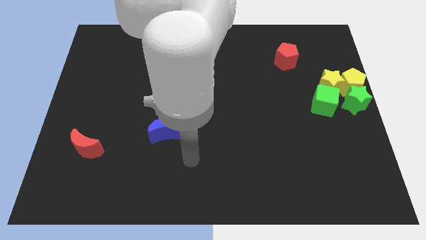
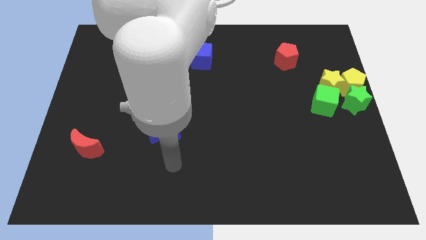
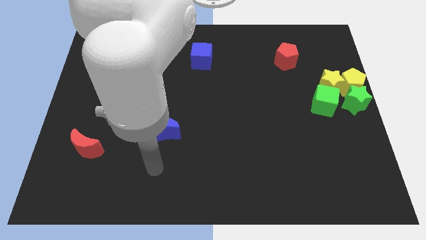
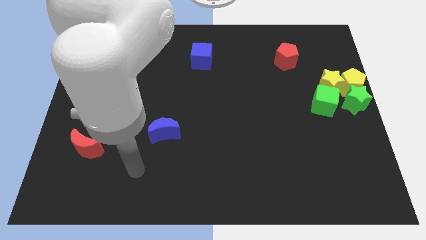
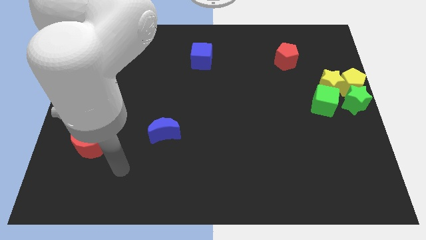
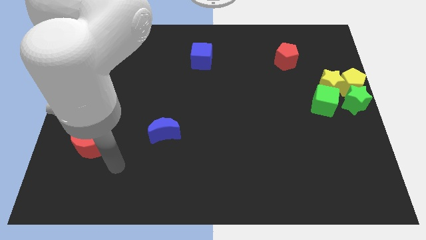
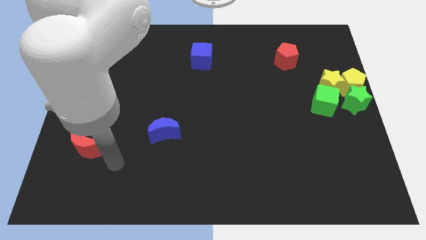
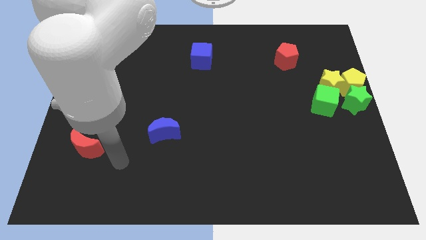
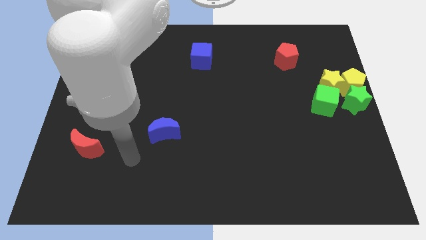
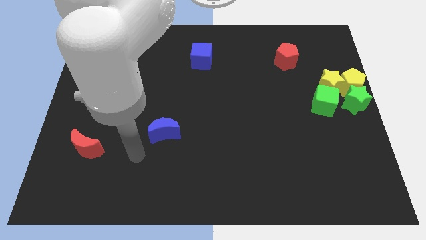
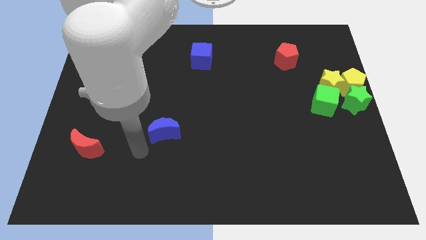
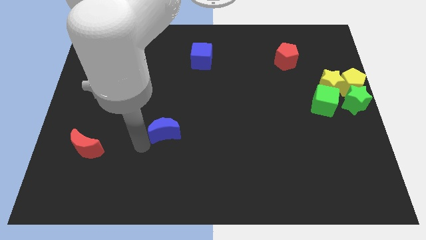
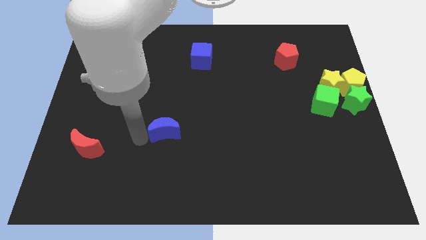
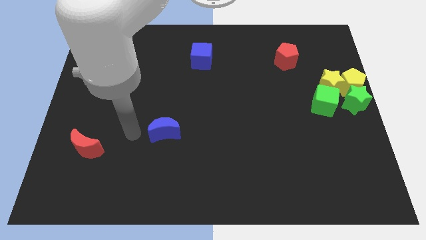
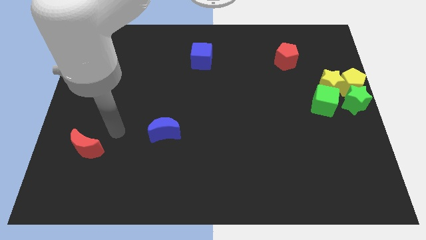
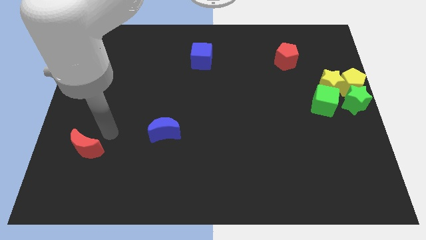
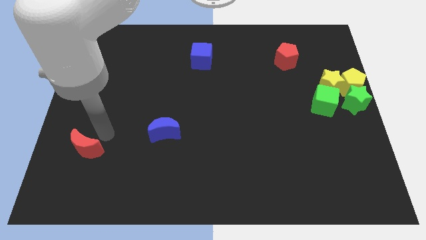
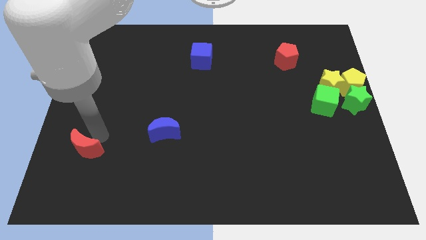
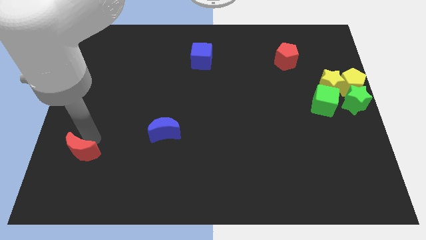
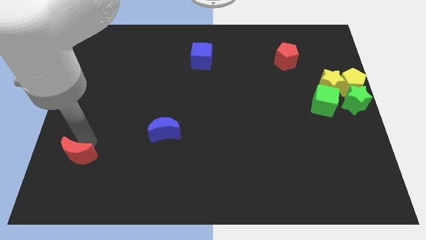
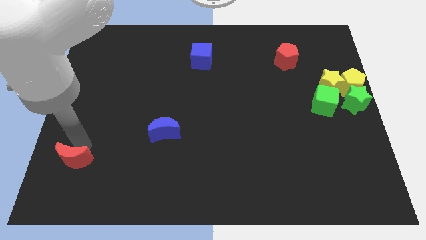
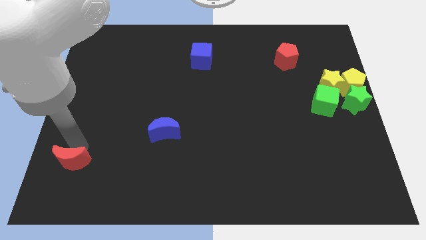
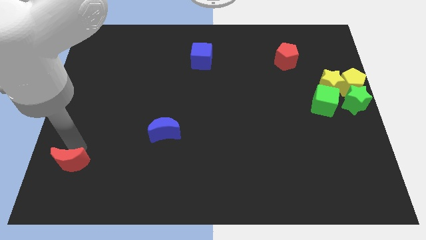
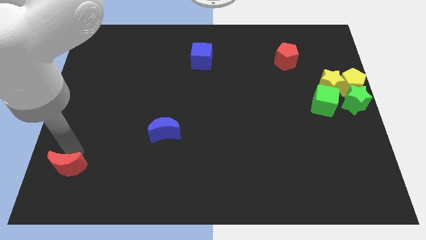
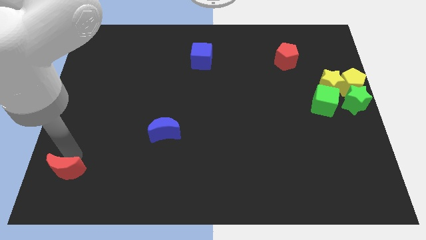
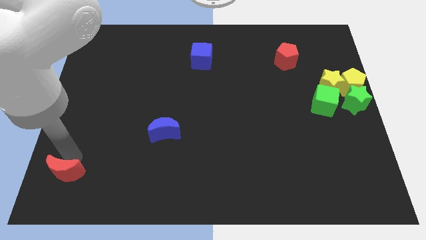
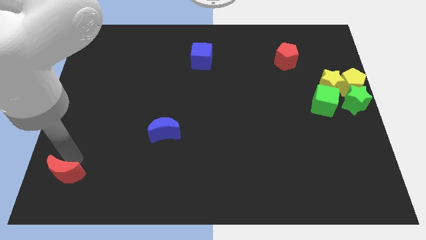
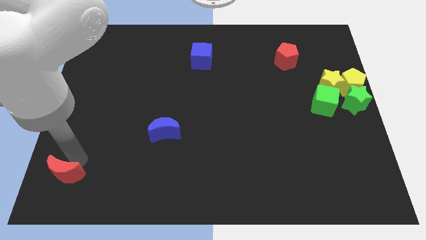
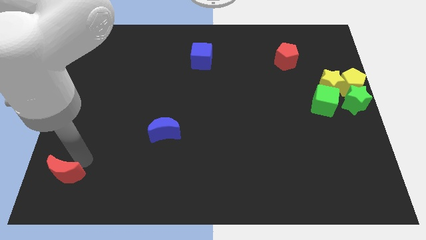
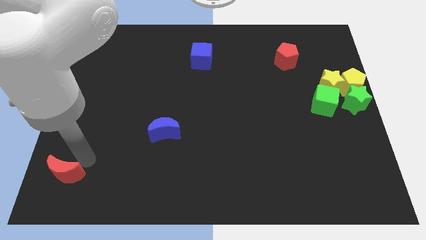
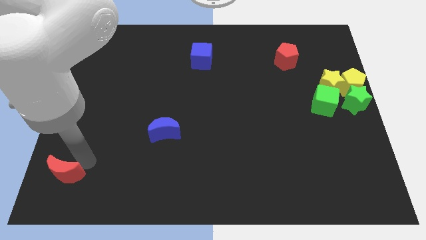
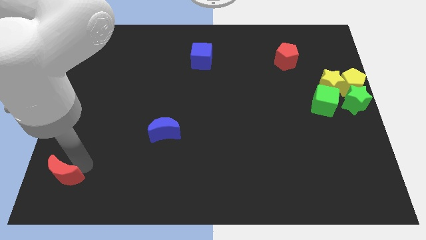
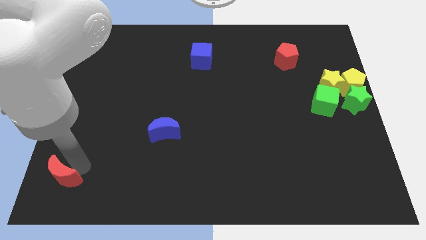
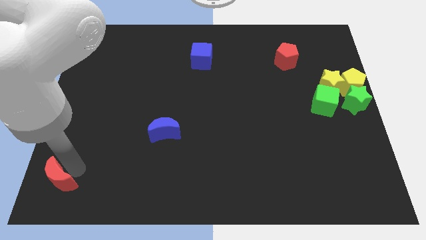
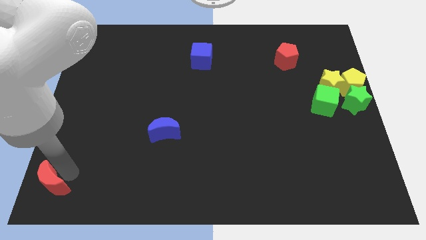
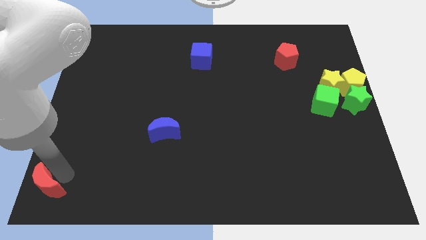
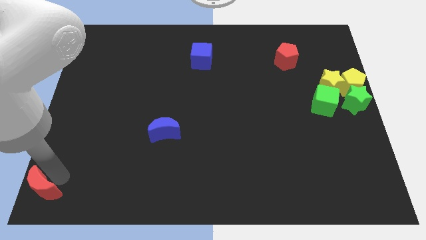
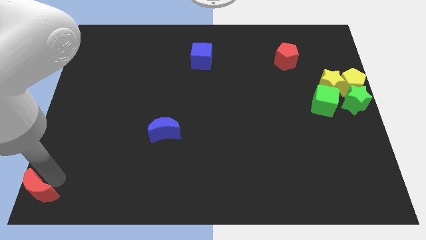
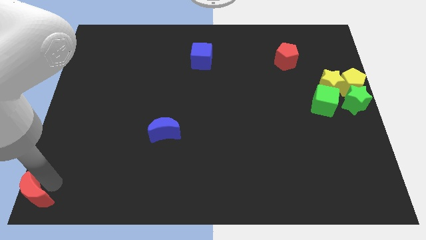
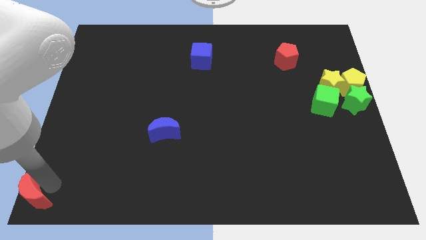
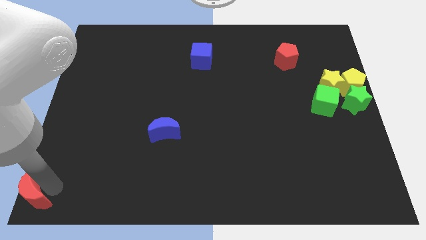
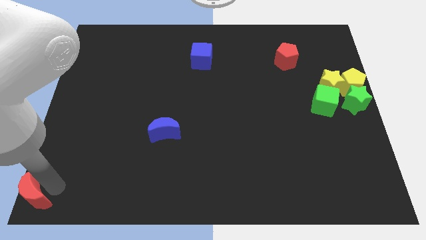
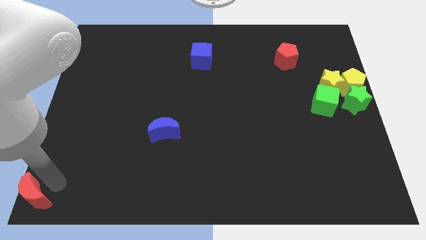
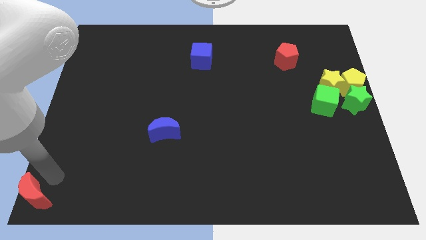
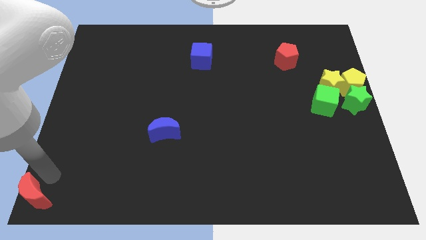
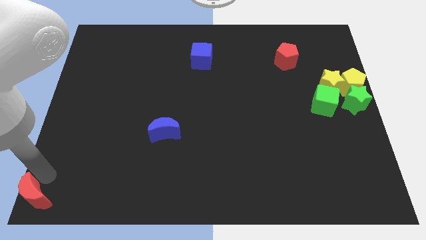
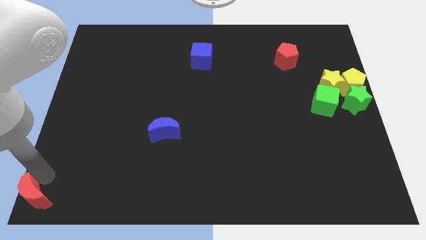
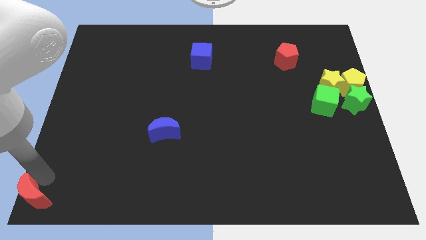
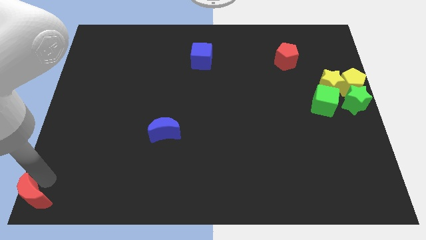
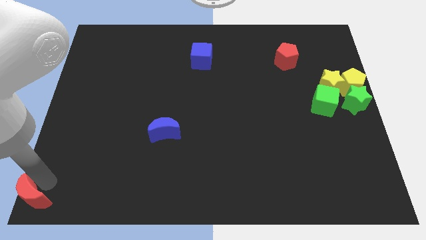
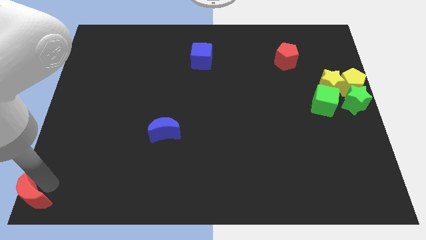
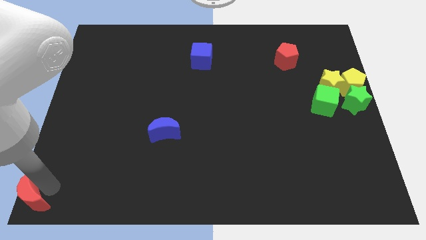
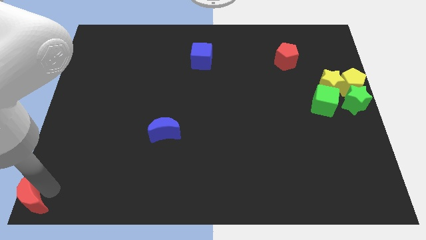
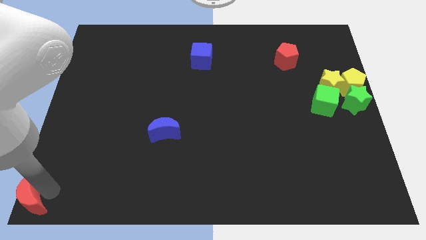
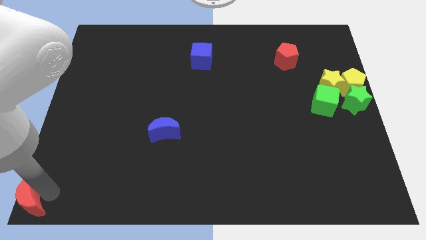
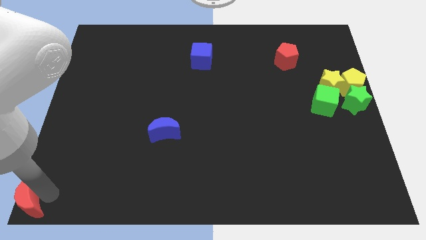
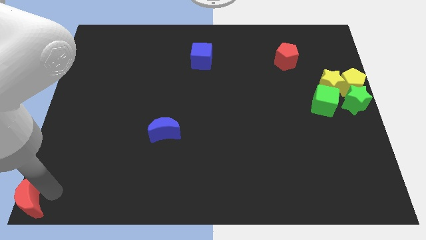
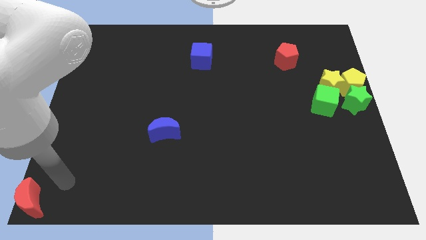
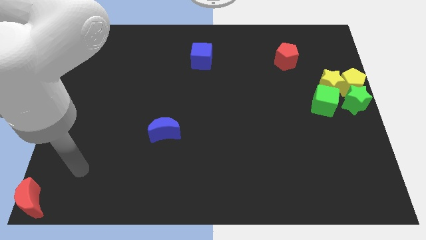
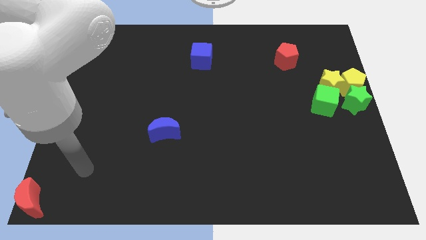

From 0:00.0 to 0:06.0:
move the red crescent to the bottom left corner of the board

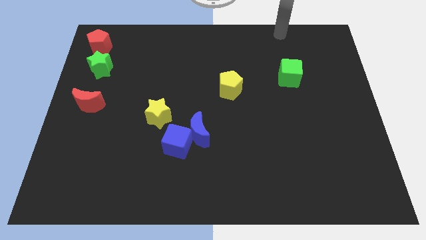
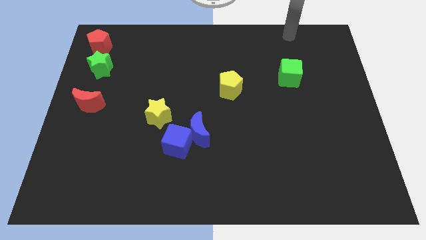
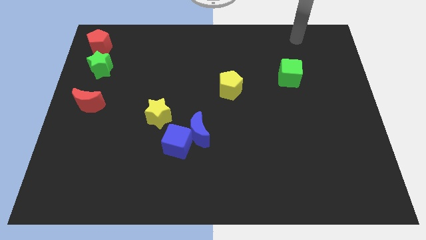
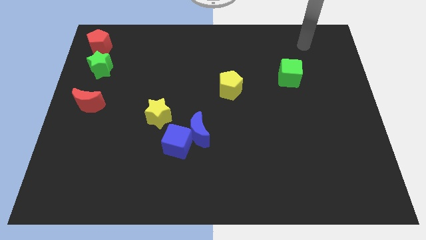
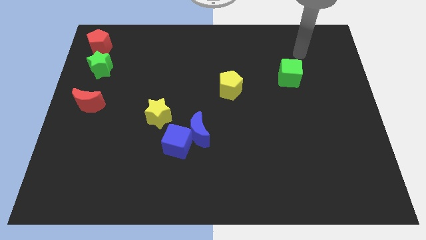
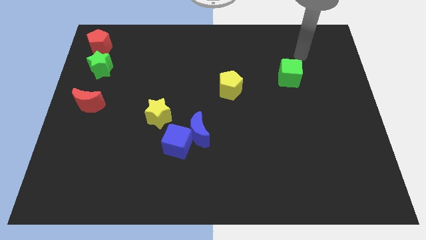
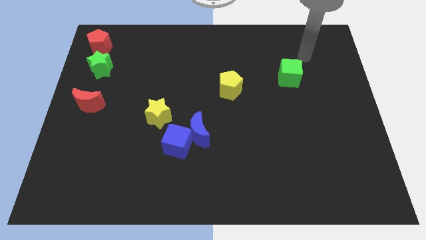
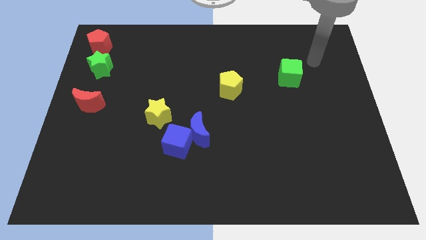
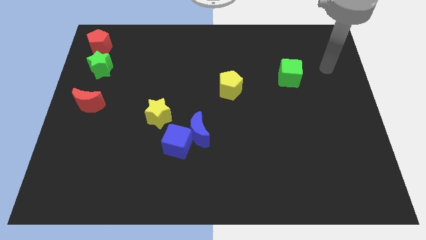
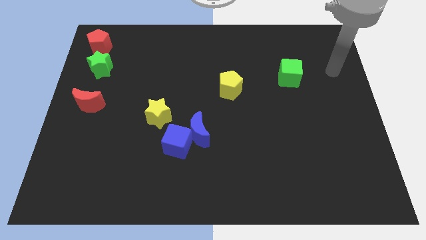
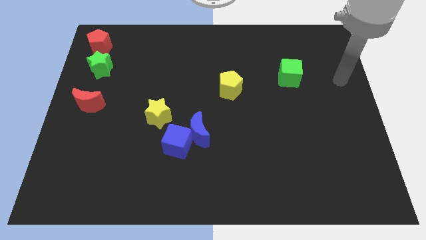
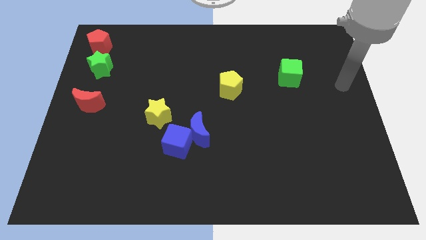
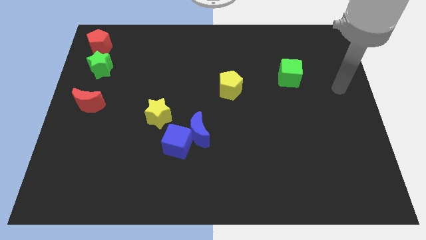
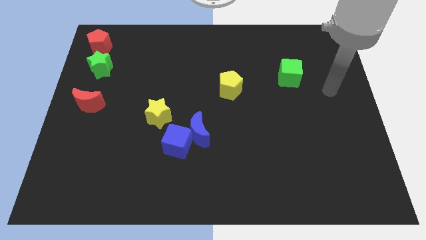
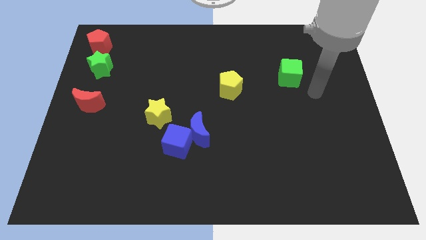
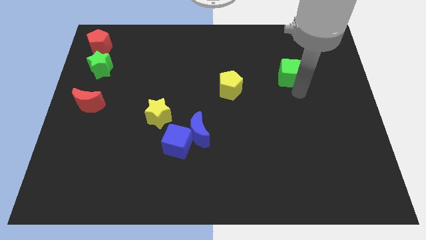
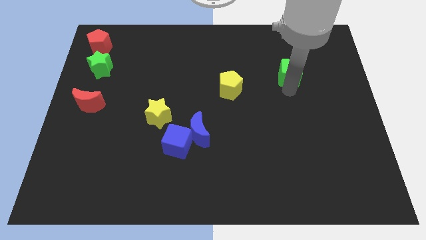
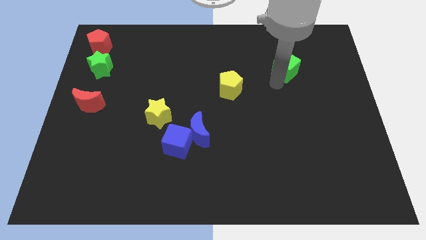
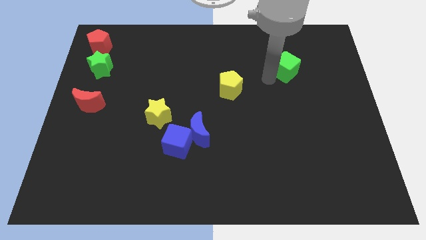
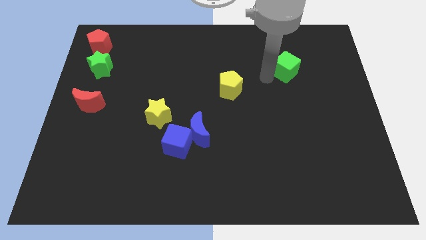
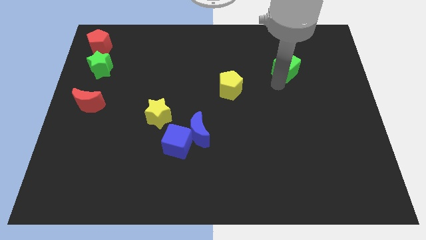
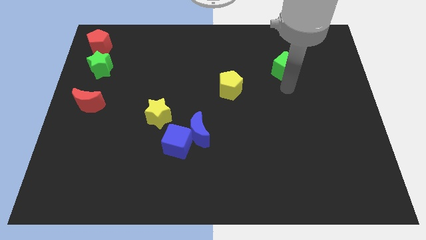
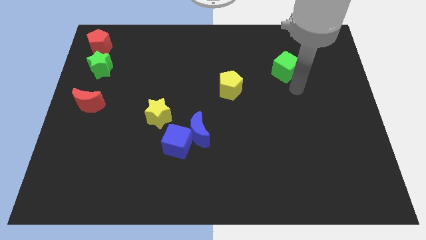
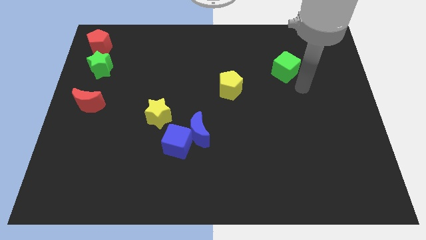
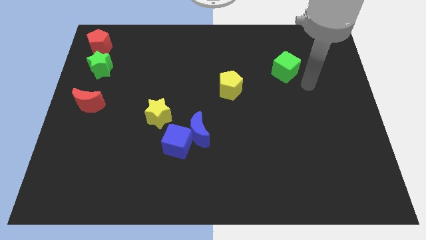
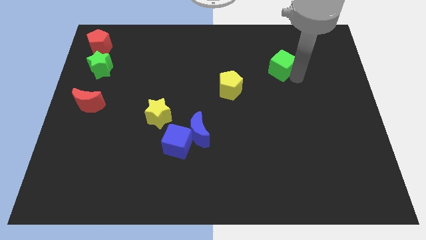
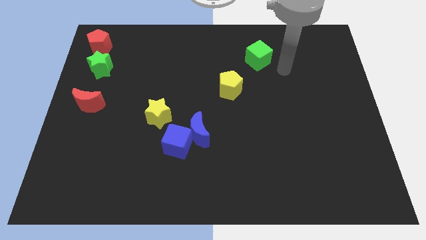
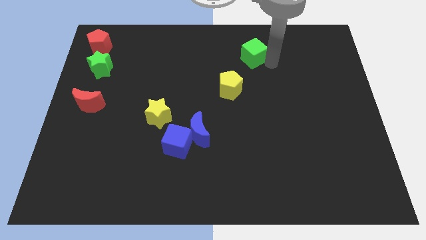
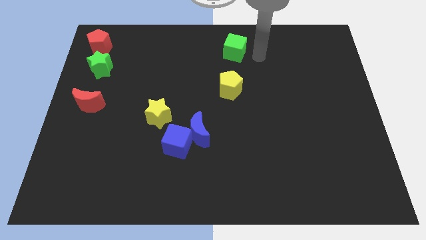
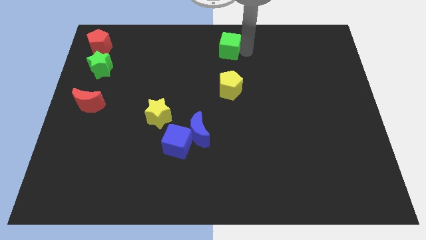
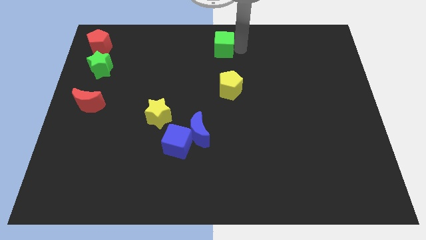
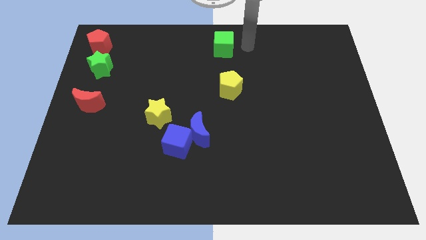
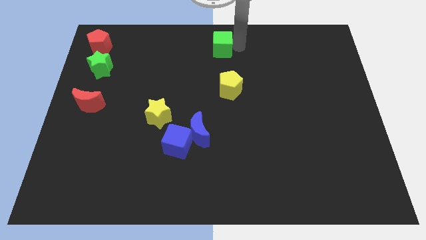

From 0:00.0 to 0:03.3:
move green cube towards the top center
